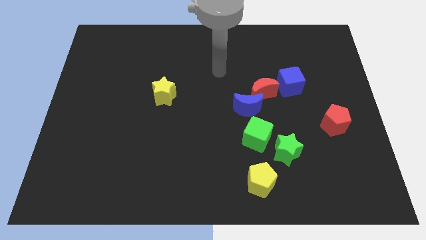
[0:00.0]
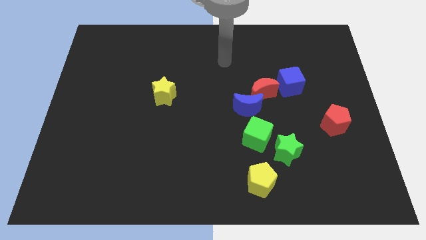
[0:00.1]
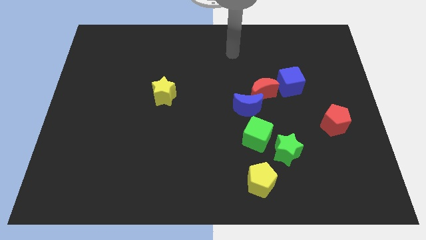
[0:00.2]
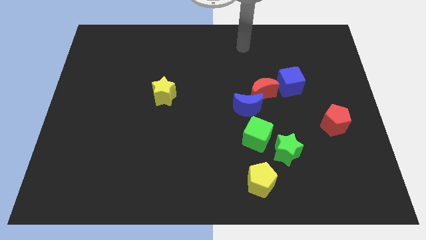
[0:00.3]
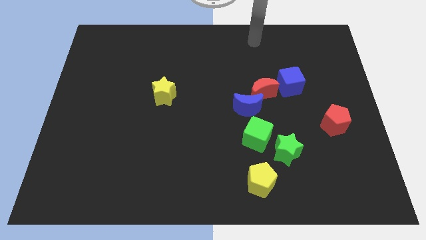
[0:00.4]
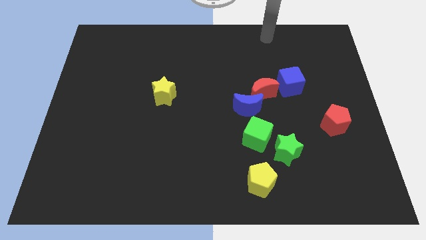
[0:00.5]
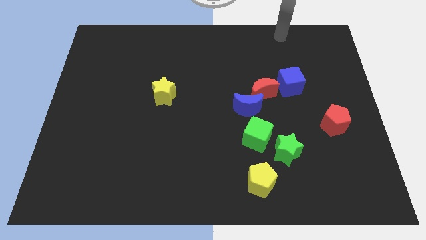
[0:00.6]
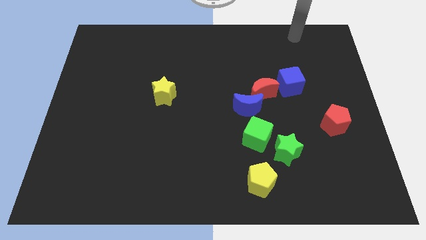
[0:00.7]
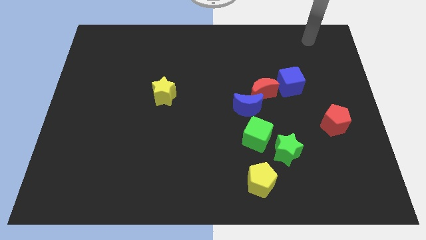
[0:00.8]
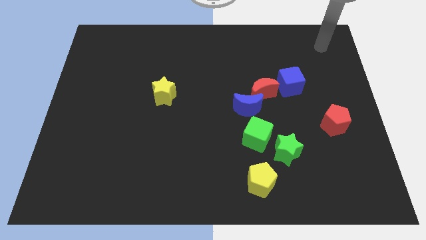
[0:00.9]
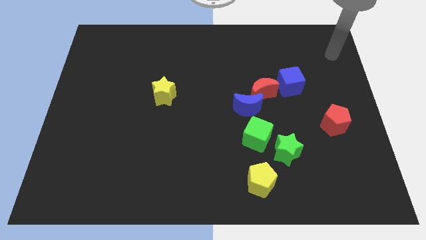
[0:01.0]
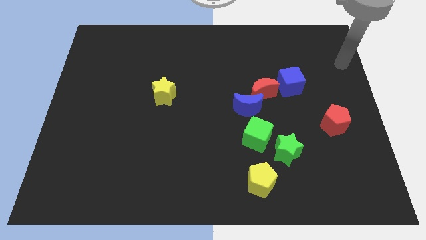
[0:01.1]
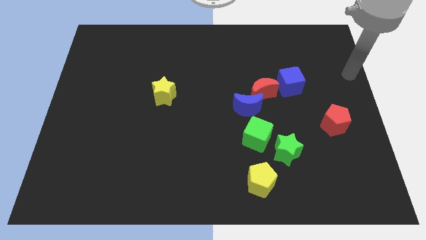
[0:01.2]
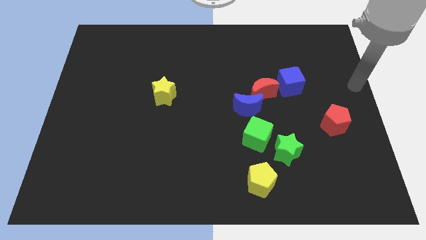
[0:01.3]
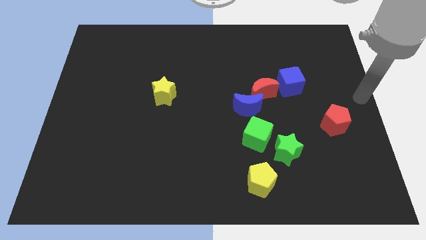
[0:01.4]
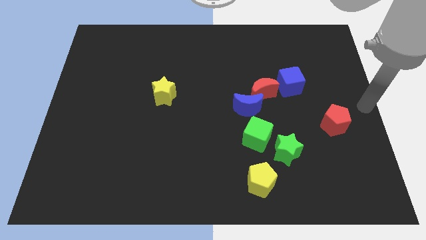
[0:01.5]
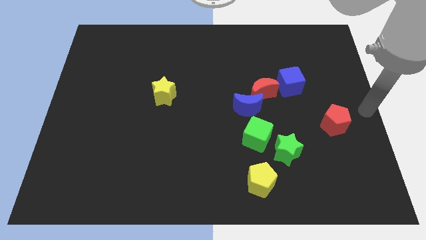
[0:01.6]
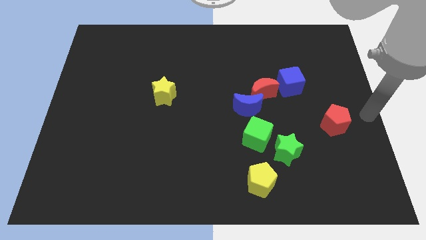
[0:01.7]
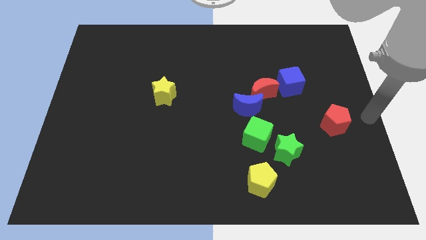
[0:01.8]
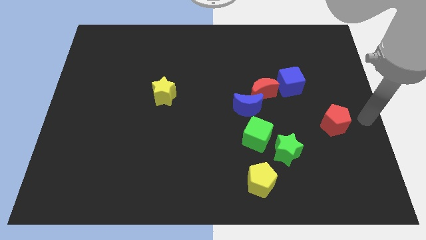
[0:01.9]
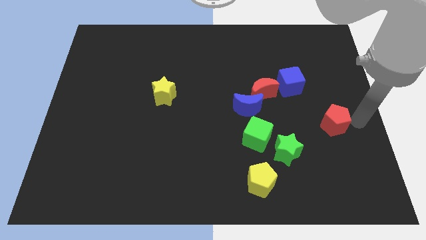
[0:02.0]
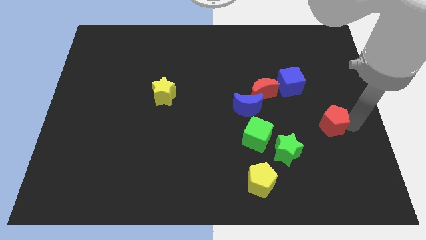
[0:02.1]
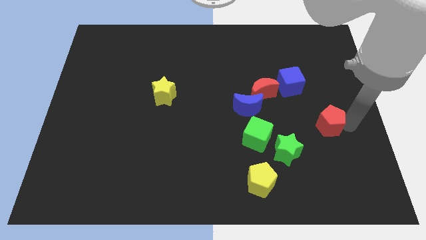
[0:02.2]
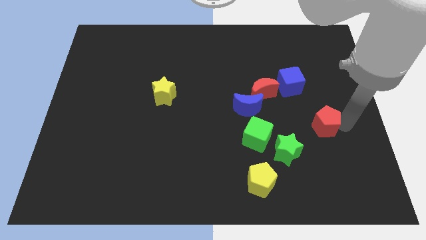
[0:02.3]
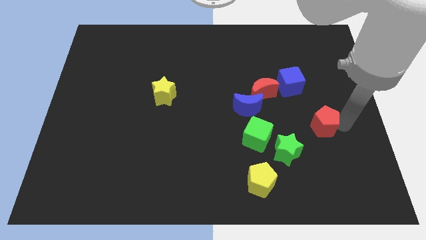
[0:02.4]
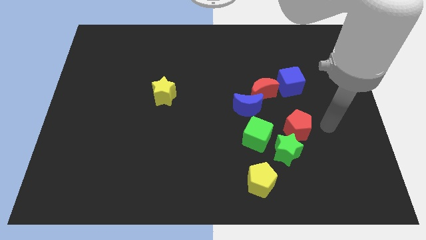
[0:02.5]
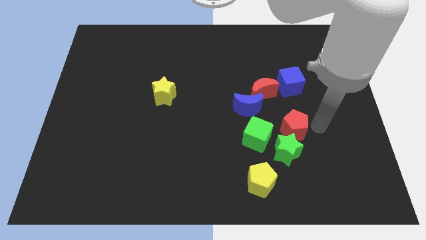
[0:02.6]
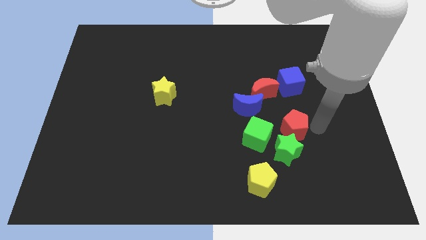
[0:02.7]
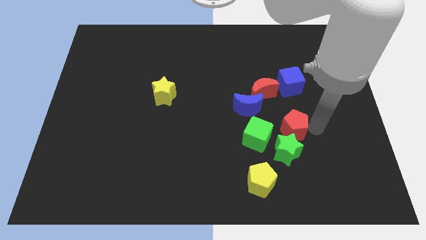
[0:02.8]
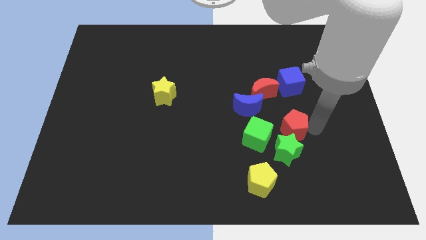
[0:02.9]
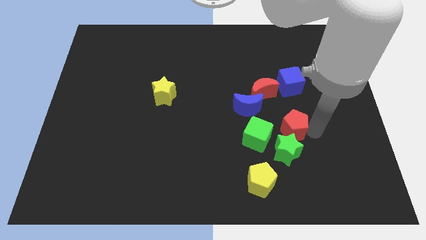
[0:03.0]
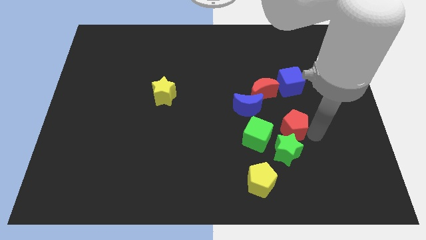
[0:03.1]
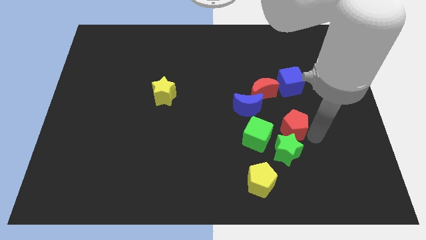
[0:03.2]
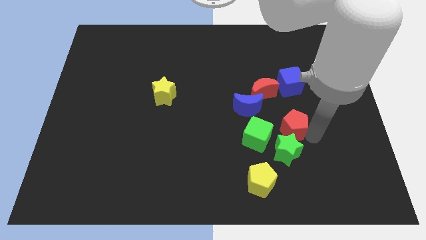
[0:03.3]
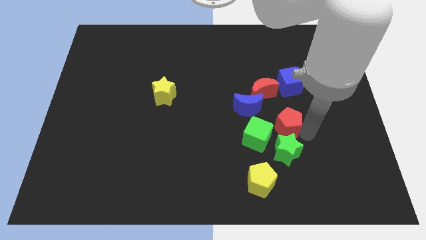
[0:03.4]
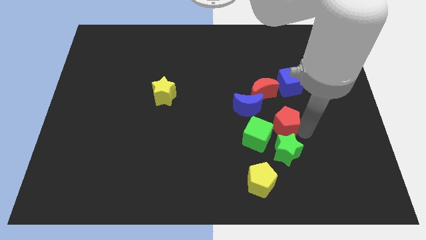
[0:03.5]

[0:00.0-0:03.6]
place red pentagon above green star

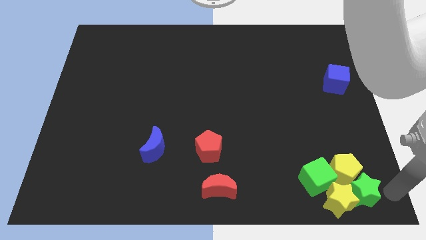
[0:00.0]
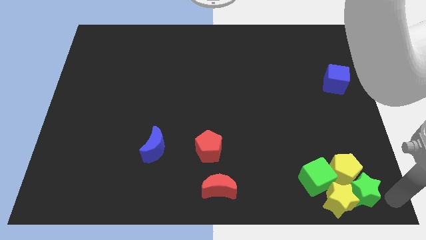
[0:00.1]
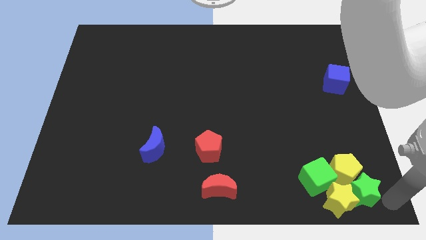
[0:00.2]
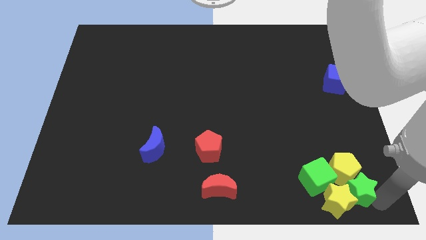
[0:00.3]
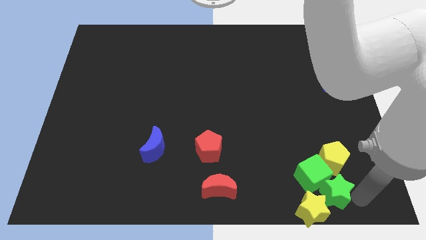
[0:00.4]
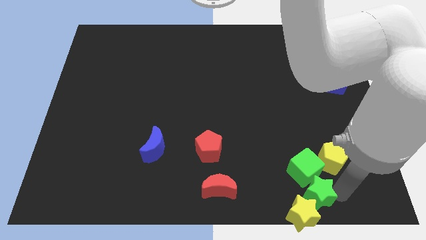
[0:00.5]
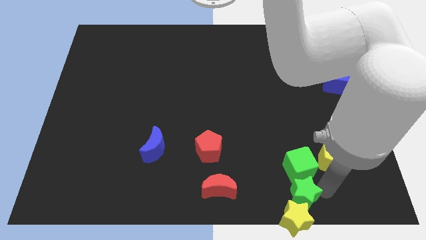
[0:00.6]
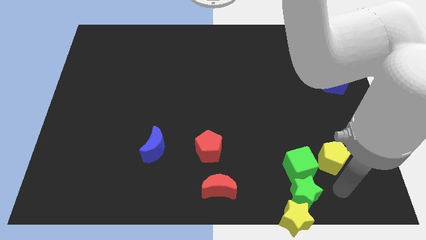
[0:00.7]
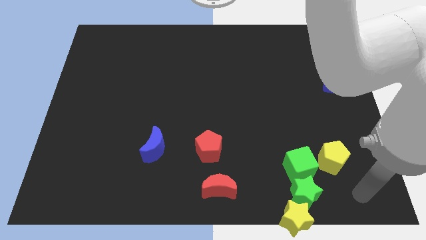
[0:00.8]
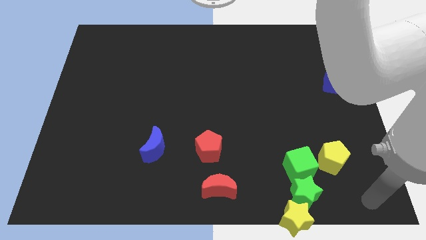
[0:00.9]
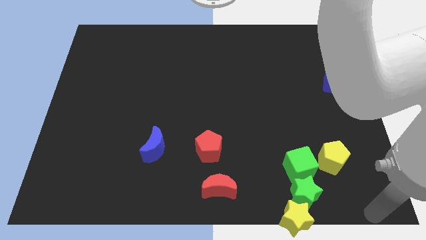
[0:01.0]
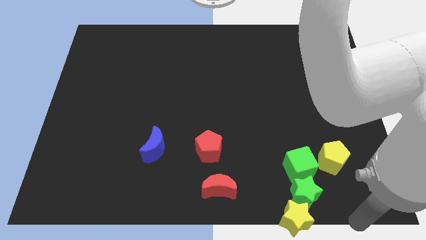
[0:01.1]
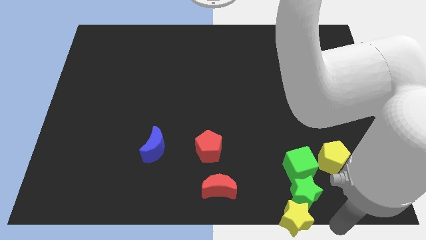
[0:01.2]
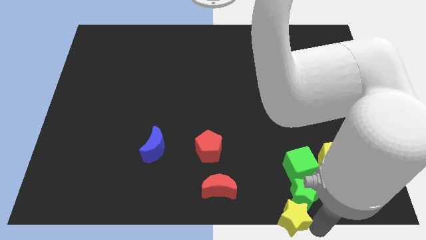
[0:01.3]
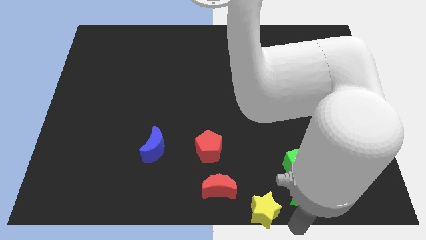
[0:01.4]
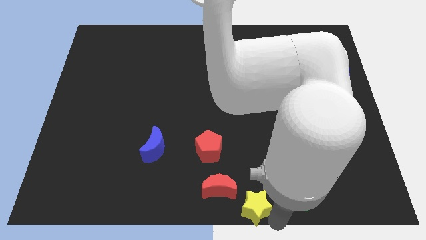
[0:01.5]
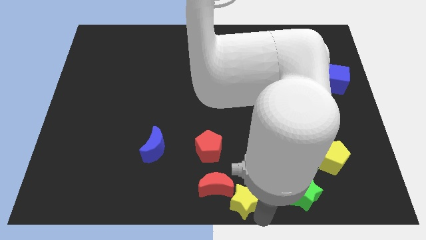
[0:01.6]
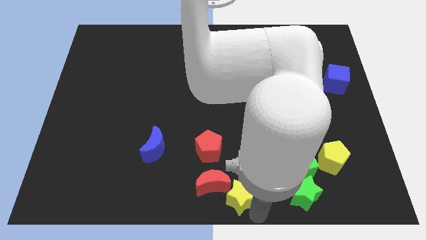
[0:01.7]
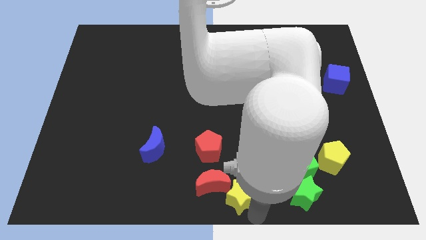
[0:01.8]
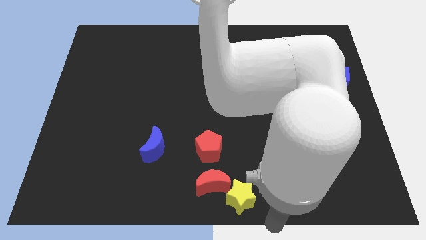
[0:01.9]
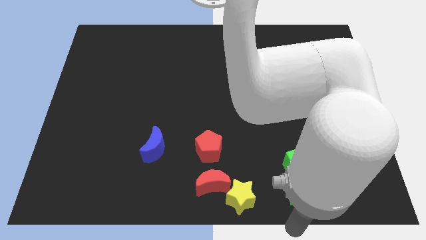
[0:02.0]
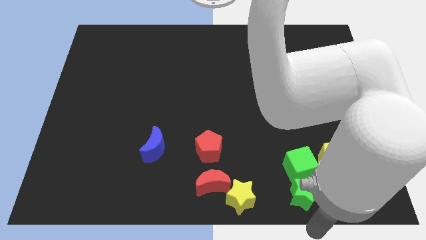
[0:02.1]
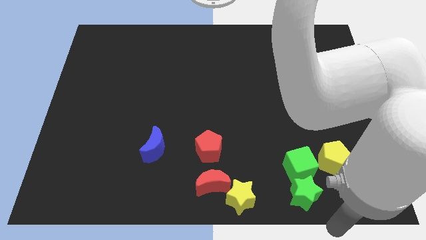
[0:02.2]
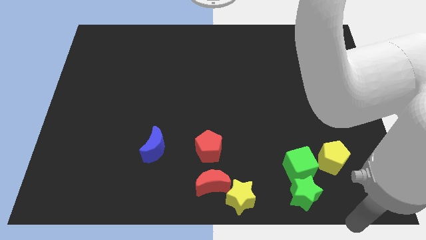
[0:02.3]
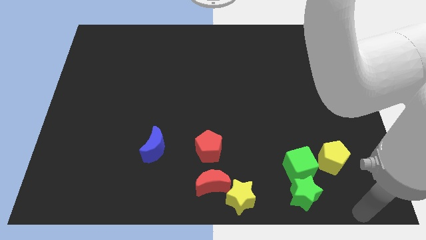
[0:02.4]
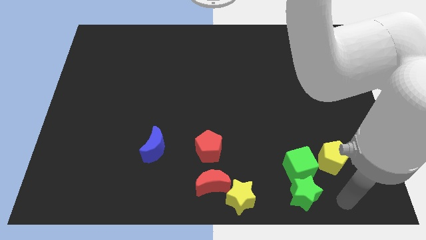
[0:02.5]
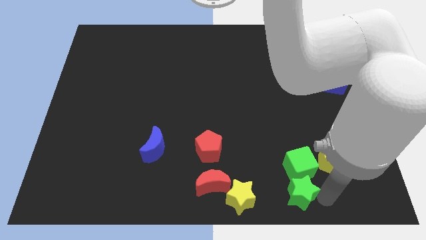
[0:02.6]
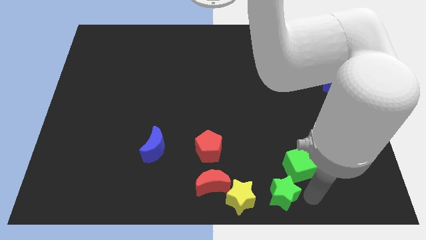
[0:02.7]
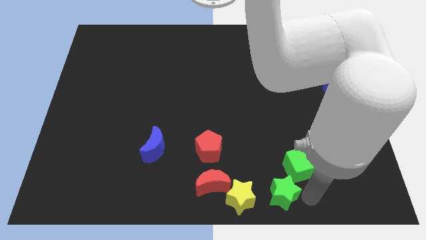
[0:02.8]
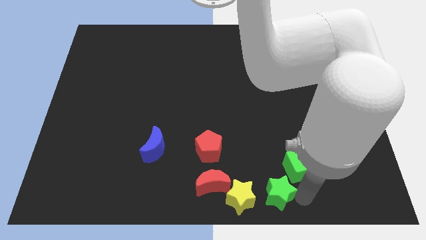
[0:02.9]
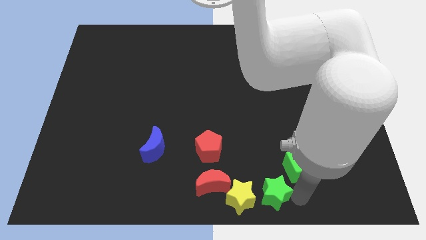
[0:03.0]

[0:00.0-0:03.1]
attach the yellow star to the red moon

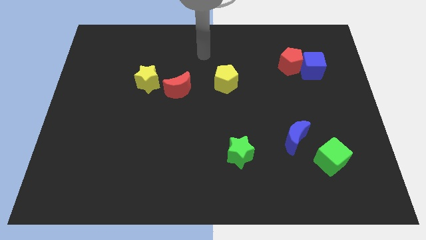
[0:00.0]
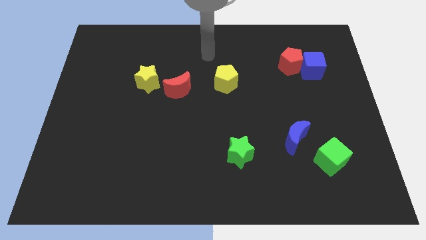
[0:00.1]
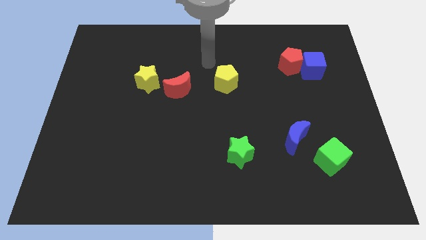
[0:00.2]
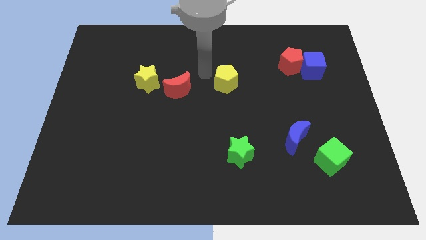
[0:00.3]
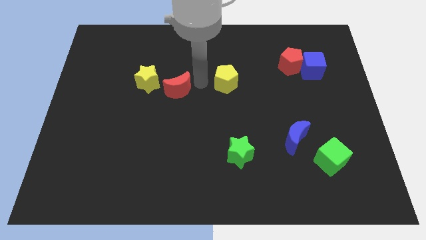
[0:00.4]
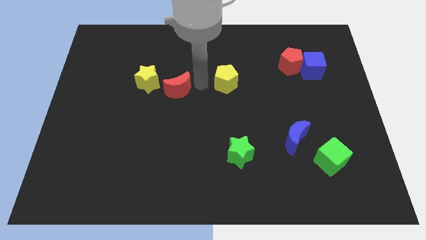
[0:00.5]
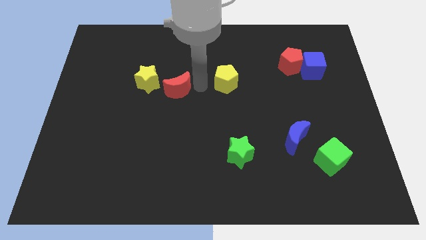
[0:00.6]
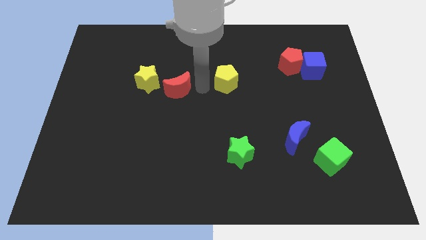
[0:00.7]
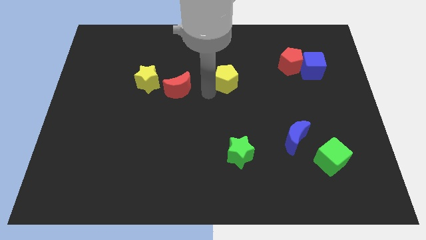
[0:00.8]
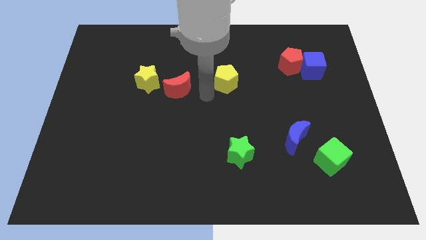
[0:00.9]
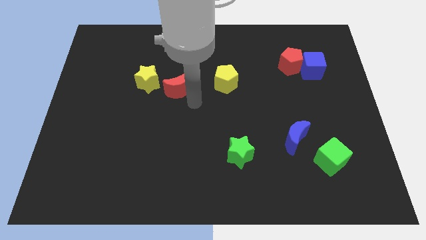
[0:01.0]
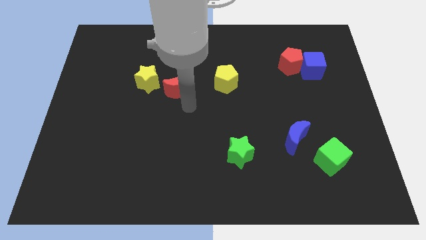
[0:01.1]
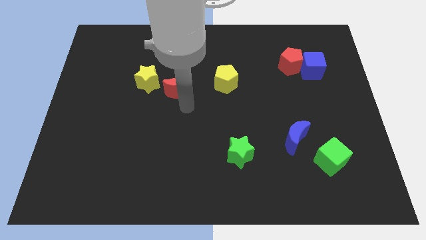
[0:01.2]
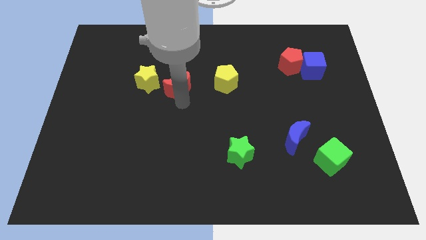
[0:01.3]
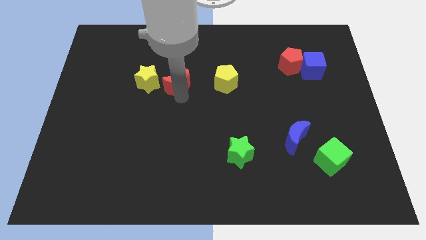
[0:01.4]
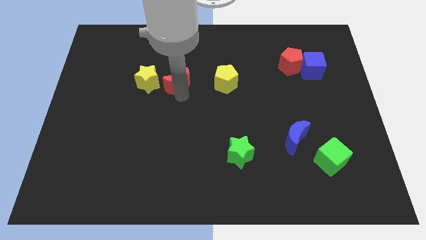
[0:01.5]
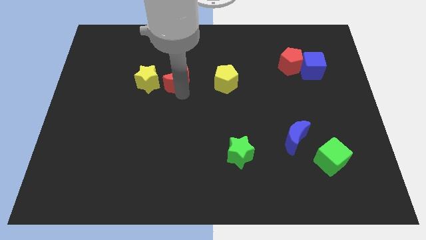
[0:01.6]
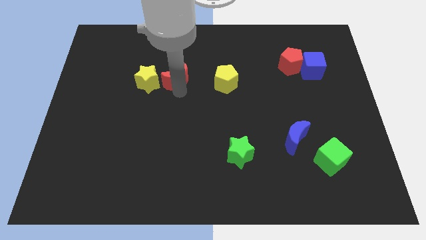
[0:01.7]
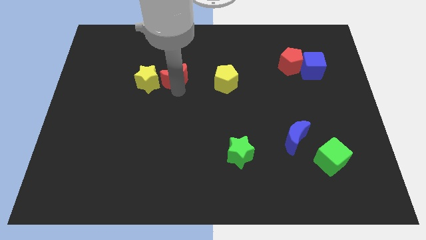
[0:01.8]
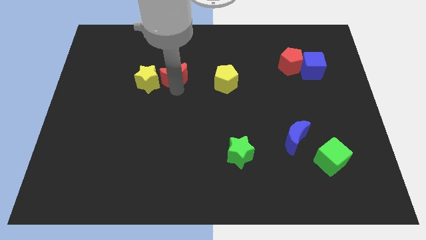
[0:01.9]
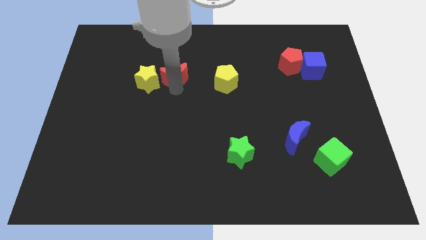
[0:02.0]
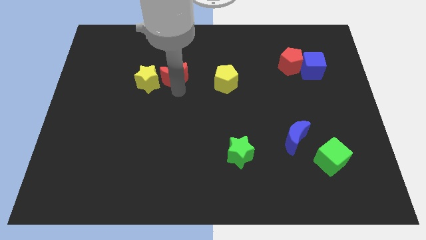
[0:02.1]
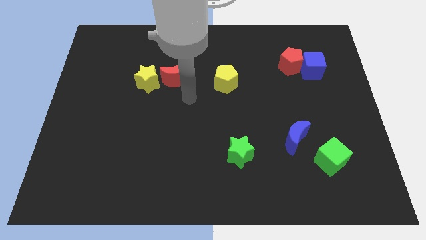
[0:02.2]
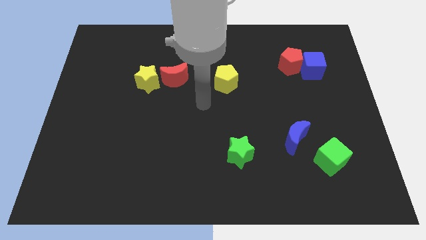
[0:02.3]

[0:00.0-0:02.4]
slightly move the red crescent towards top of the board
